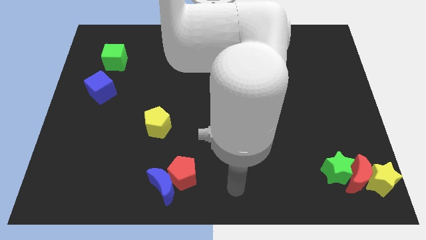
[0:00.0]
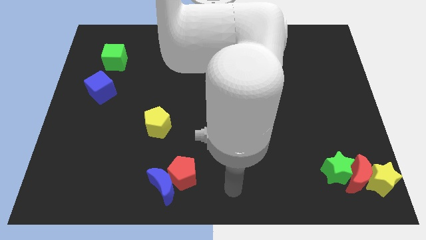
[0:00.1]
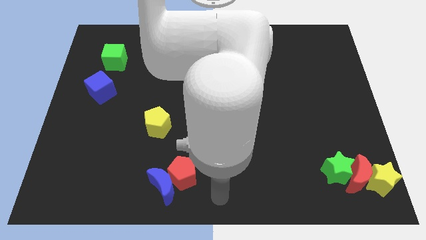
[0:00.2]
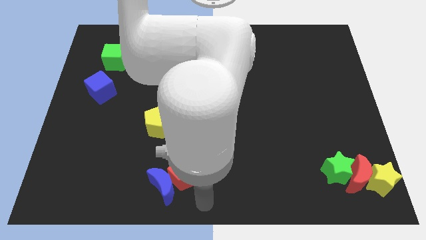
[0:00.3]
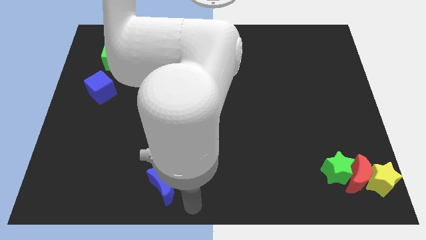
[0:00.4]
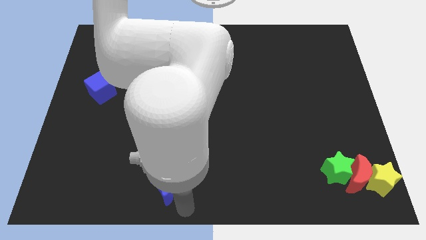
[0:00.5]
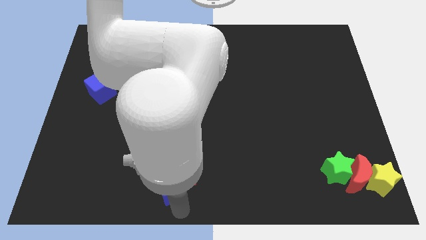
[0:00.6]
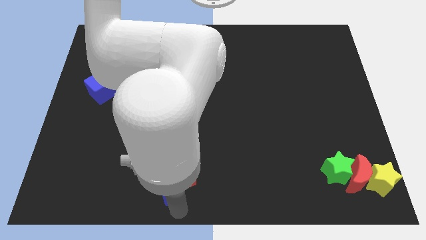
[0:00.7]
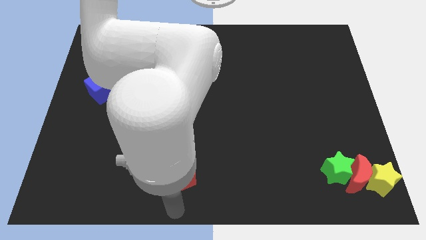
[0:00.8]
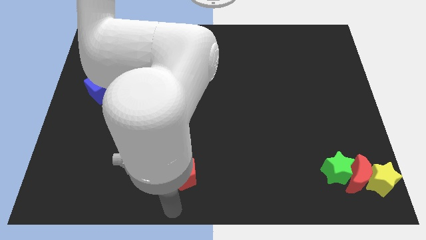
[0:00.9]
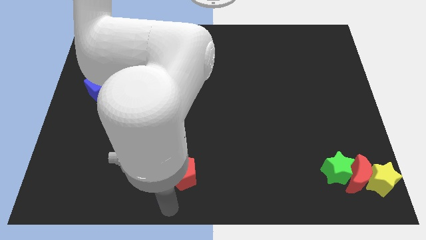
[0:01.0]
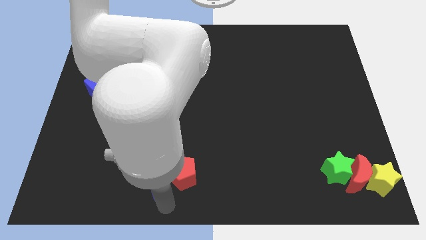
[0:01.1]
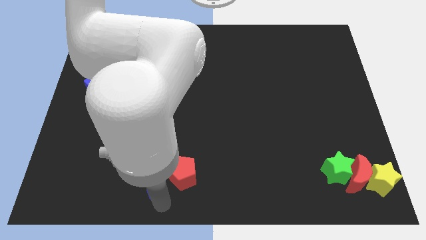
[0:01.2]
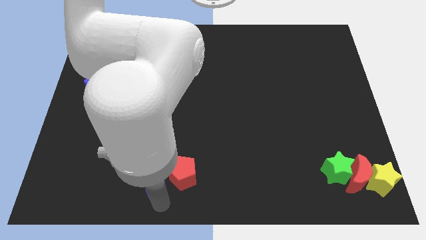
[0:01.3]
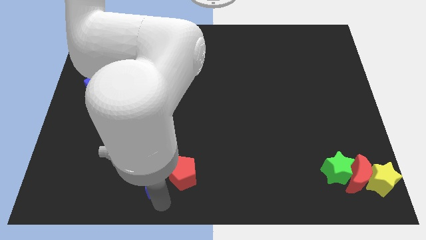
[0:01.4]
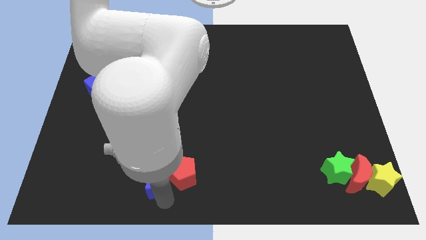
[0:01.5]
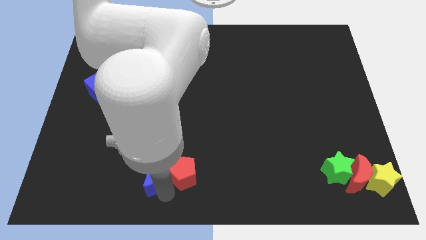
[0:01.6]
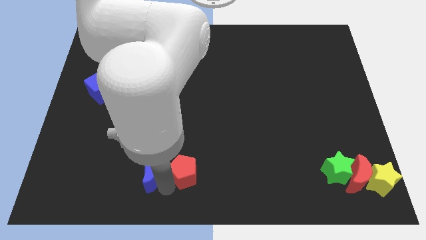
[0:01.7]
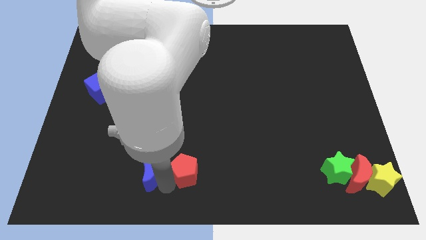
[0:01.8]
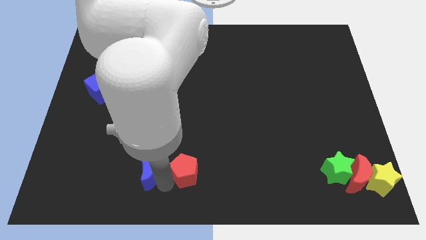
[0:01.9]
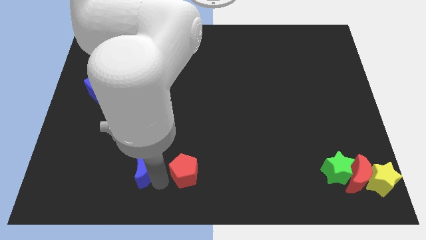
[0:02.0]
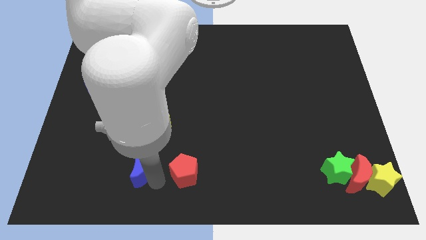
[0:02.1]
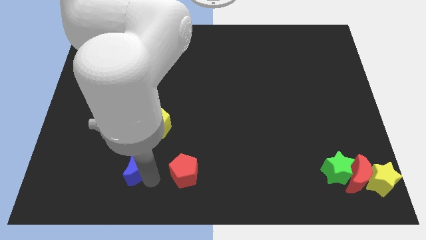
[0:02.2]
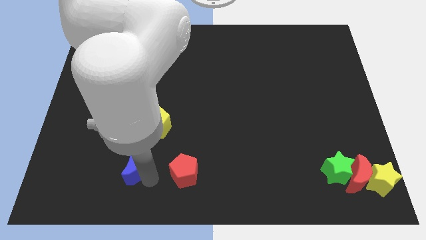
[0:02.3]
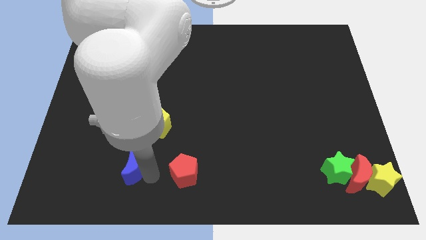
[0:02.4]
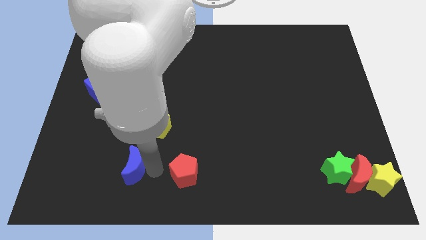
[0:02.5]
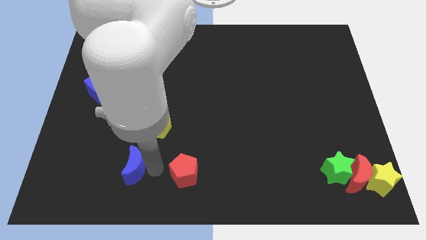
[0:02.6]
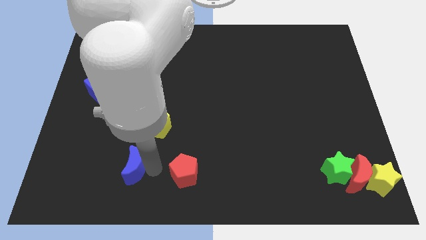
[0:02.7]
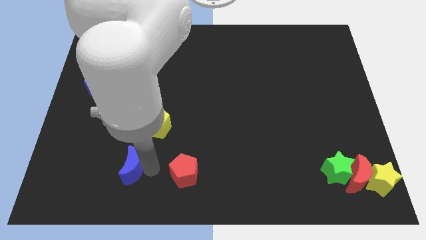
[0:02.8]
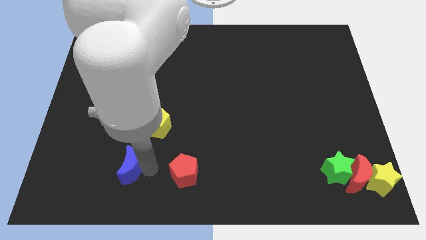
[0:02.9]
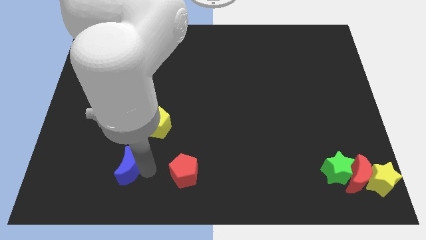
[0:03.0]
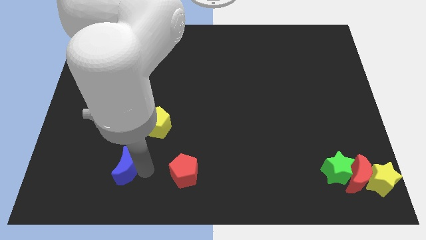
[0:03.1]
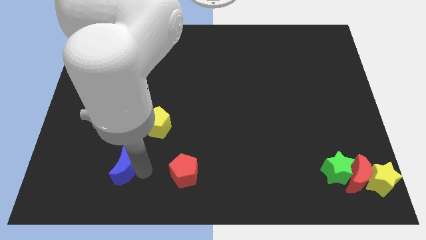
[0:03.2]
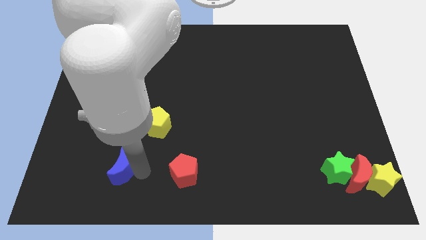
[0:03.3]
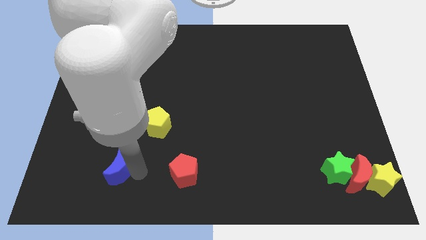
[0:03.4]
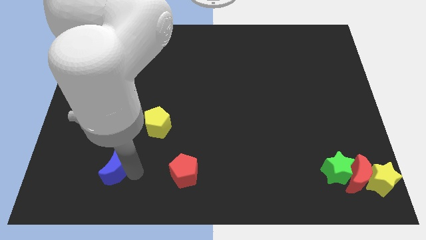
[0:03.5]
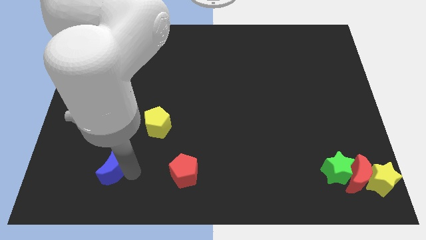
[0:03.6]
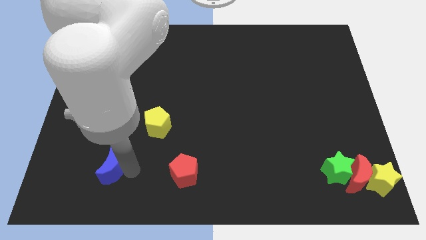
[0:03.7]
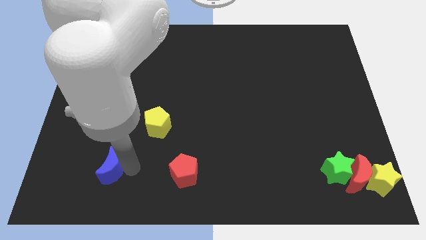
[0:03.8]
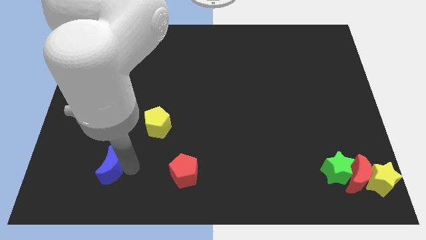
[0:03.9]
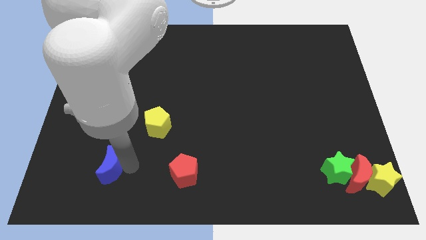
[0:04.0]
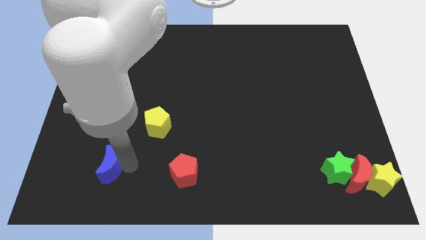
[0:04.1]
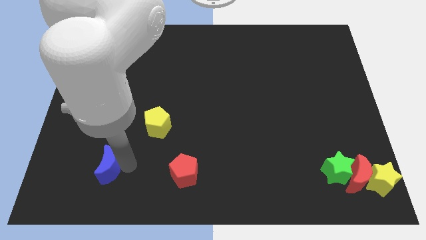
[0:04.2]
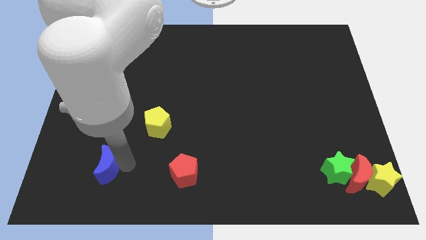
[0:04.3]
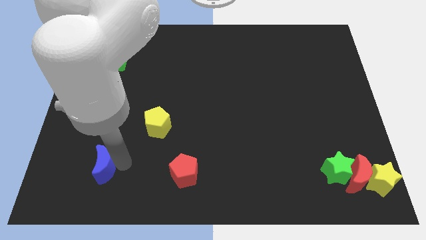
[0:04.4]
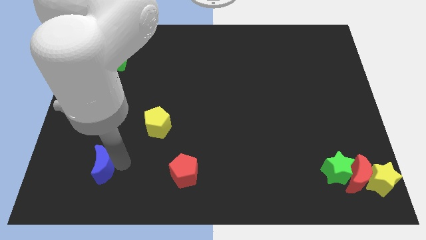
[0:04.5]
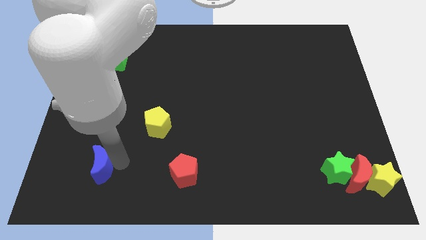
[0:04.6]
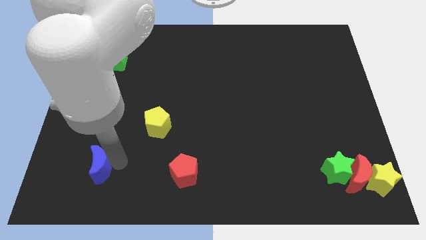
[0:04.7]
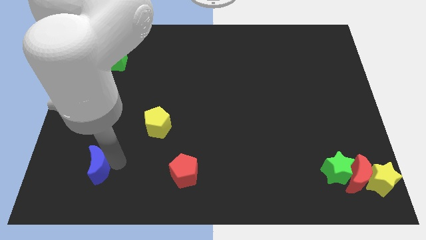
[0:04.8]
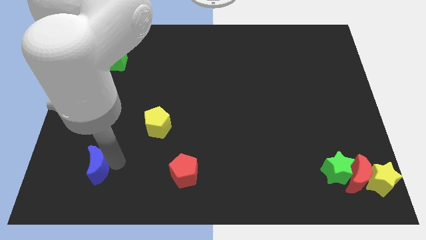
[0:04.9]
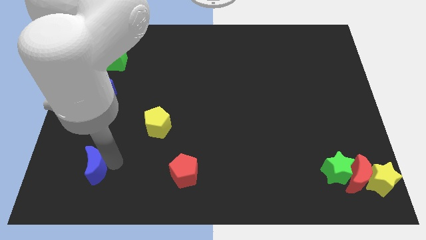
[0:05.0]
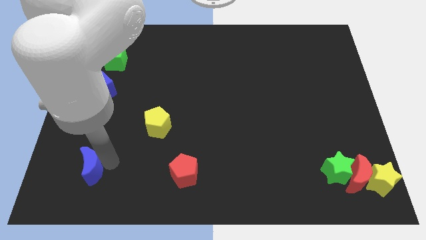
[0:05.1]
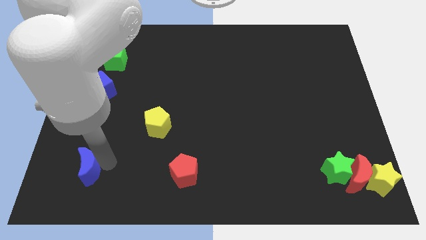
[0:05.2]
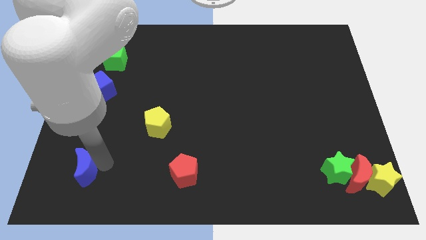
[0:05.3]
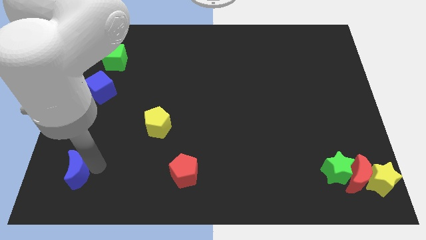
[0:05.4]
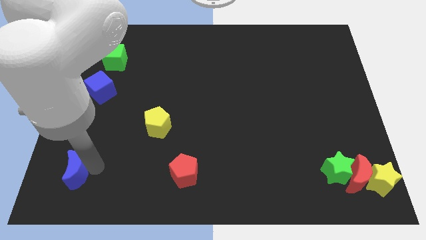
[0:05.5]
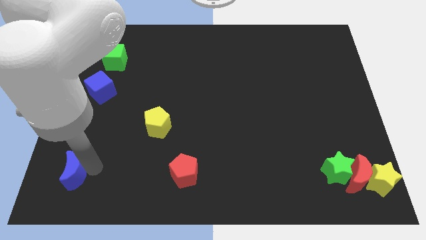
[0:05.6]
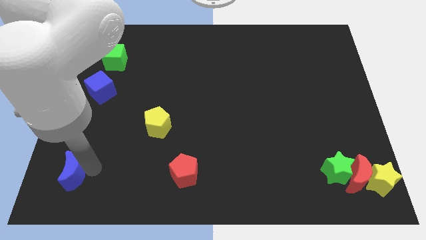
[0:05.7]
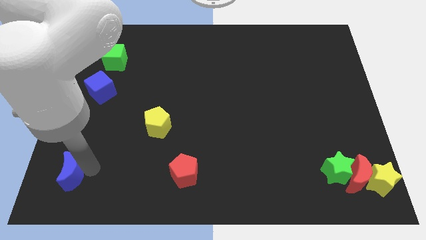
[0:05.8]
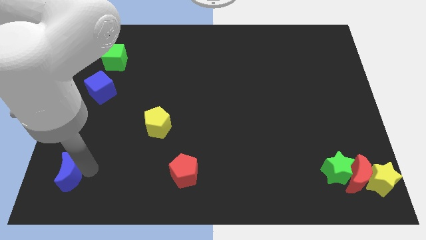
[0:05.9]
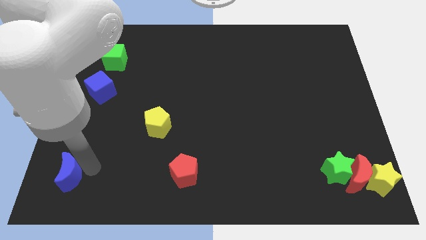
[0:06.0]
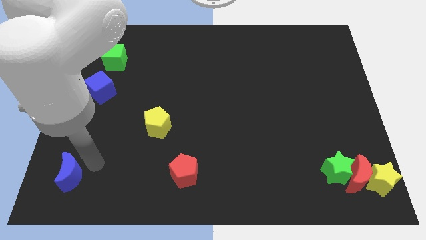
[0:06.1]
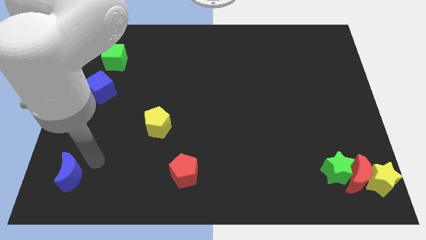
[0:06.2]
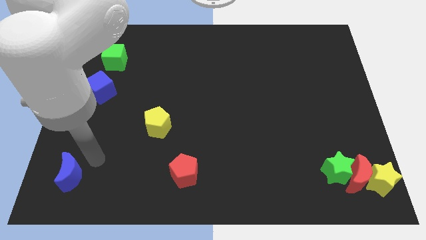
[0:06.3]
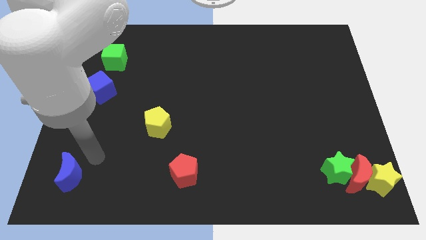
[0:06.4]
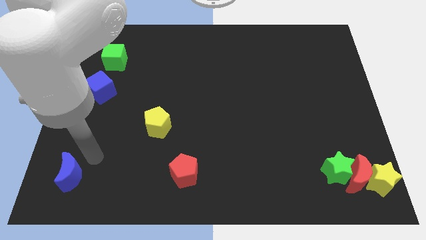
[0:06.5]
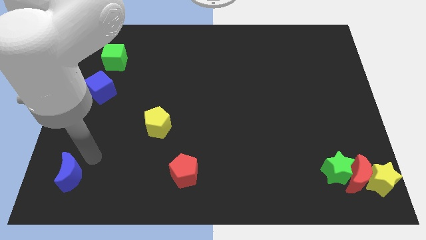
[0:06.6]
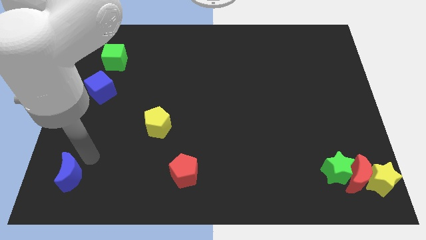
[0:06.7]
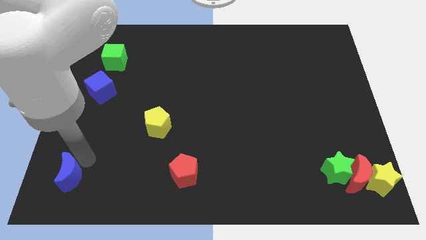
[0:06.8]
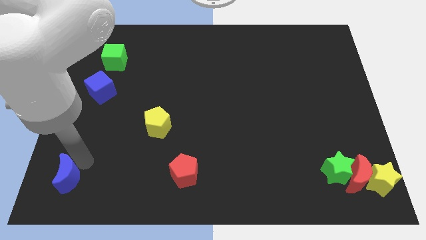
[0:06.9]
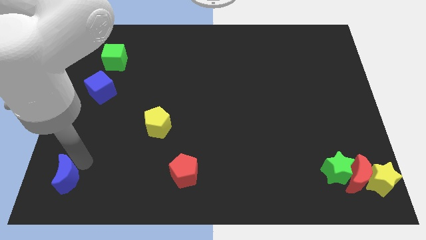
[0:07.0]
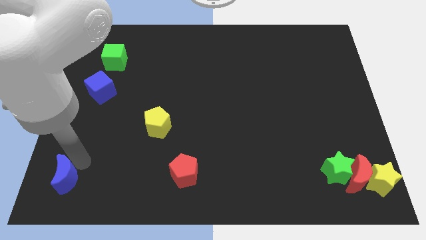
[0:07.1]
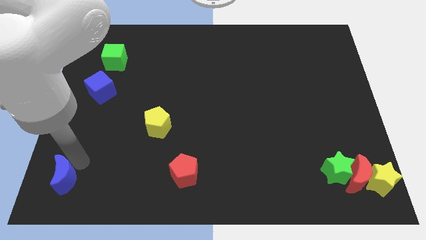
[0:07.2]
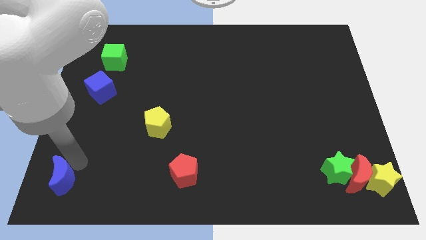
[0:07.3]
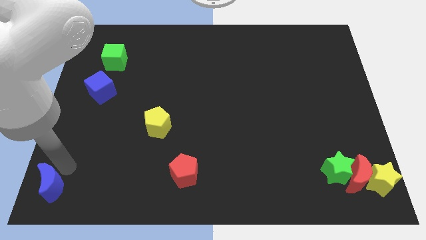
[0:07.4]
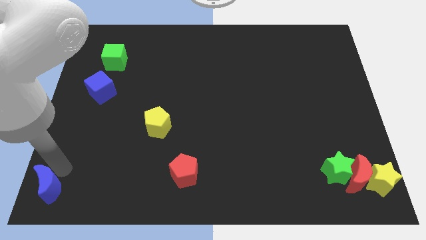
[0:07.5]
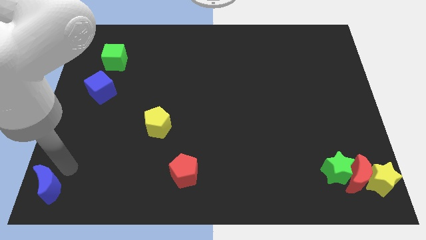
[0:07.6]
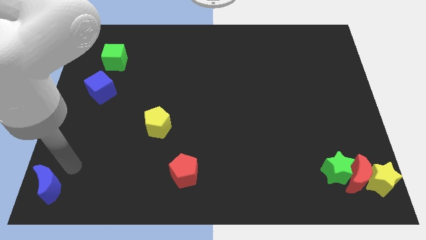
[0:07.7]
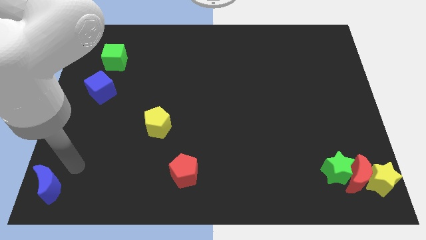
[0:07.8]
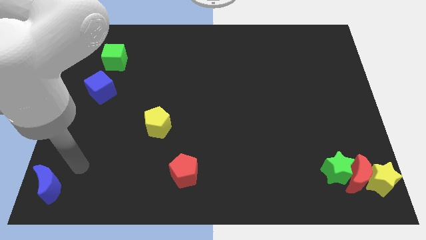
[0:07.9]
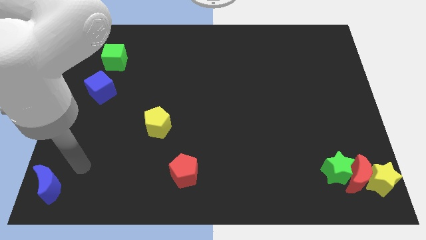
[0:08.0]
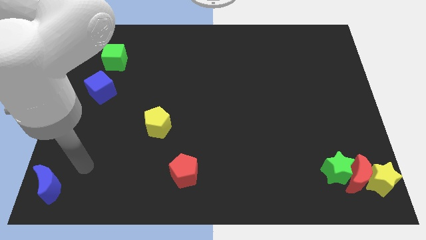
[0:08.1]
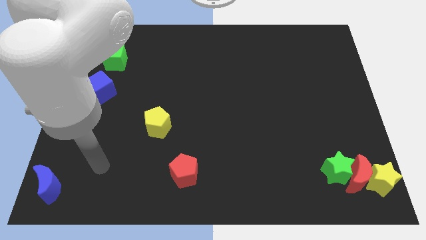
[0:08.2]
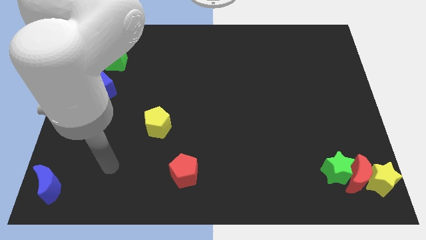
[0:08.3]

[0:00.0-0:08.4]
place blue moon to the bottom left of the board

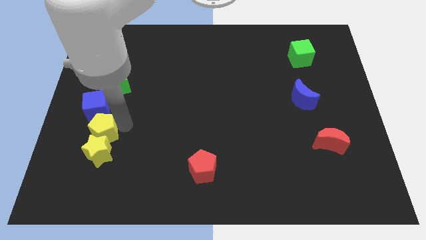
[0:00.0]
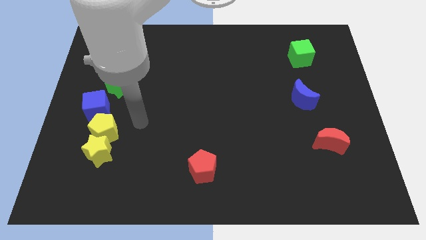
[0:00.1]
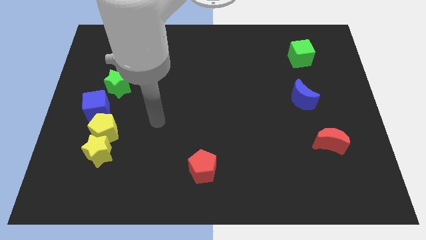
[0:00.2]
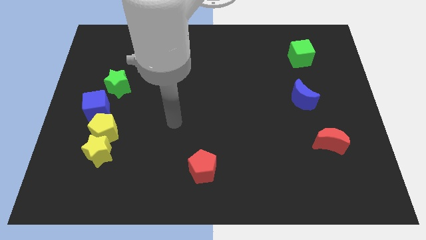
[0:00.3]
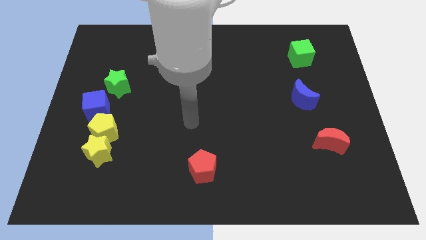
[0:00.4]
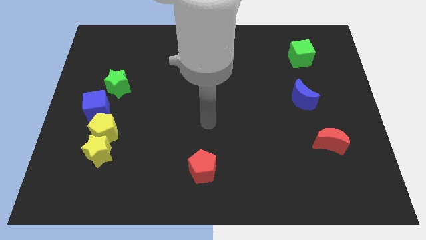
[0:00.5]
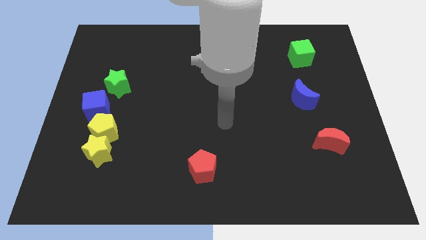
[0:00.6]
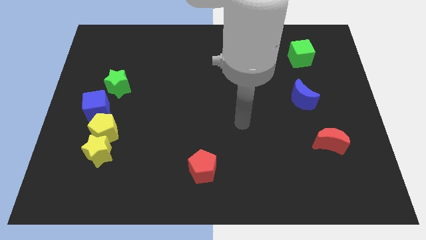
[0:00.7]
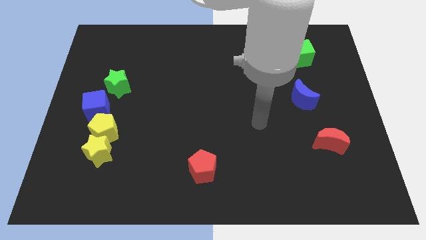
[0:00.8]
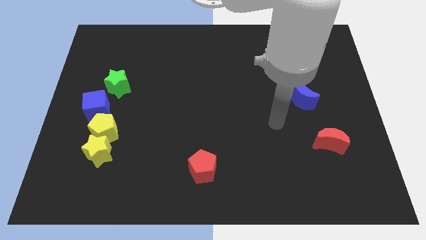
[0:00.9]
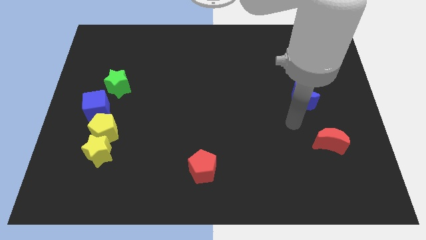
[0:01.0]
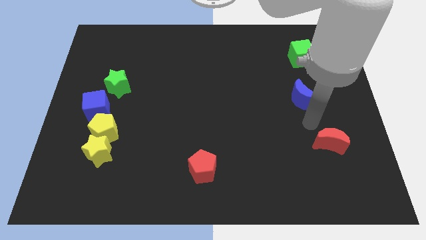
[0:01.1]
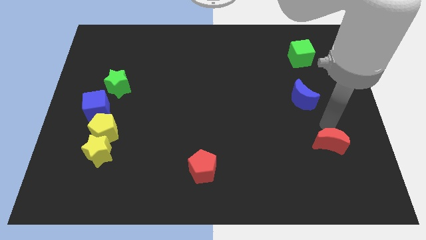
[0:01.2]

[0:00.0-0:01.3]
move your arm at the top of the red crescent
